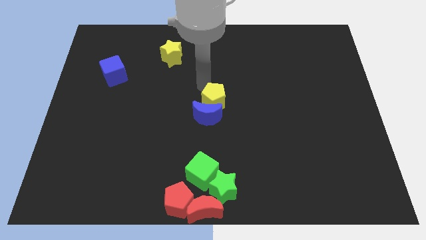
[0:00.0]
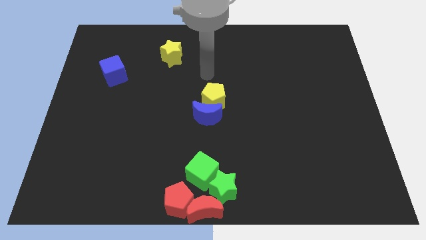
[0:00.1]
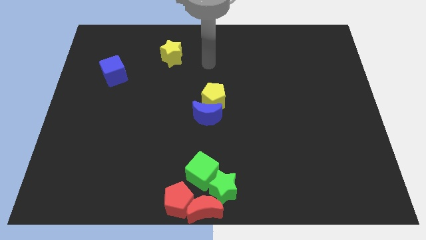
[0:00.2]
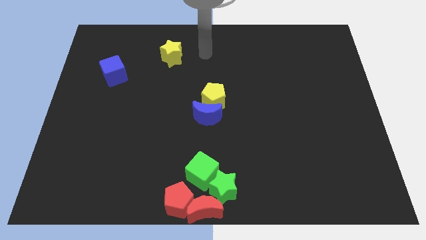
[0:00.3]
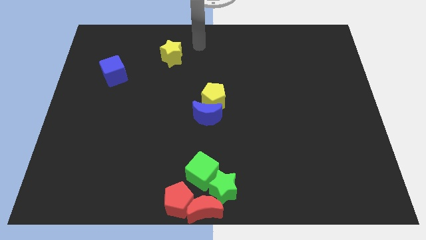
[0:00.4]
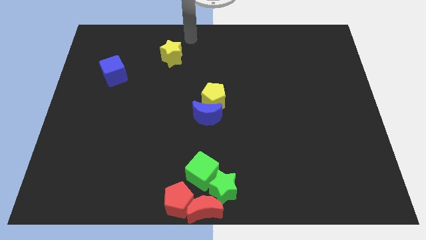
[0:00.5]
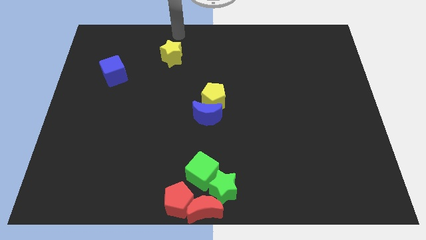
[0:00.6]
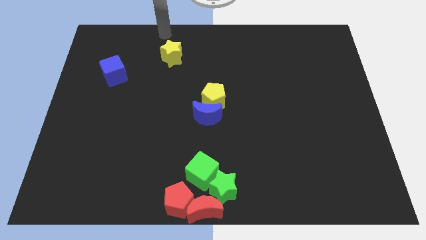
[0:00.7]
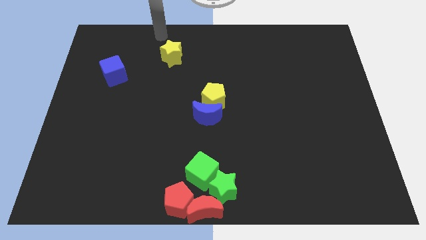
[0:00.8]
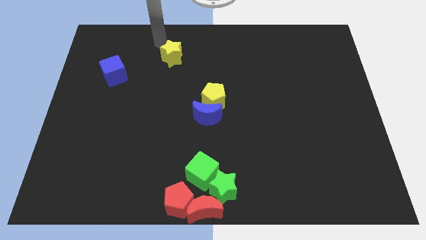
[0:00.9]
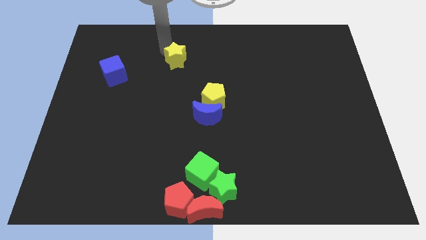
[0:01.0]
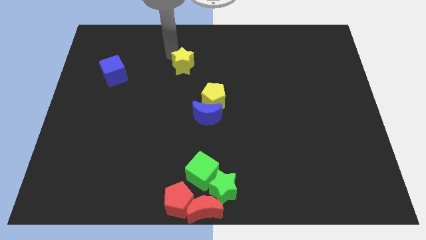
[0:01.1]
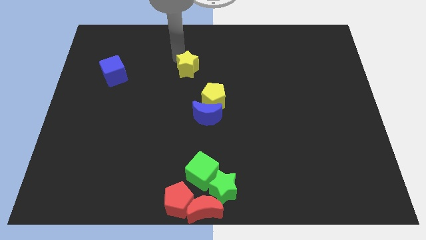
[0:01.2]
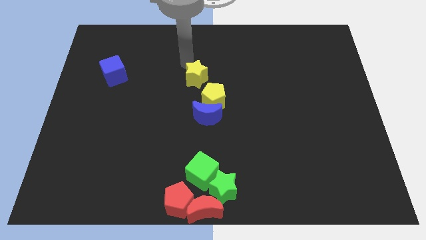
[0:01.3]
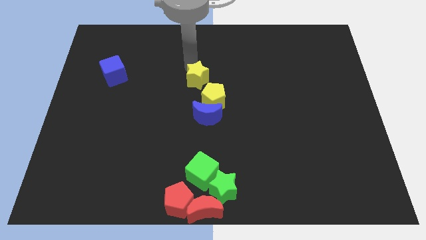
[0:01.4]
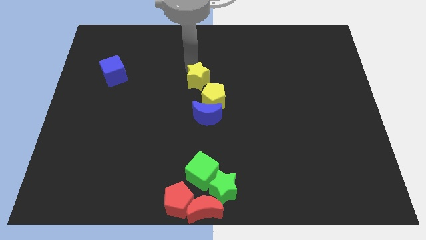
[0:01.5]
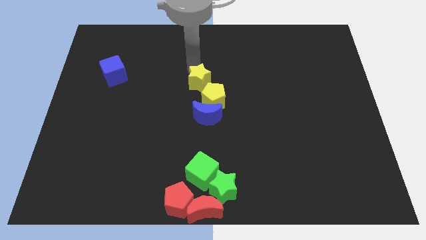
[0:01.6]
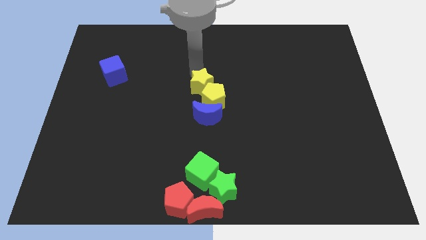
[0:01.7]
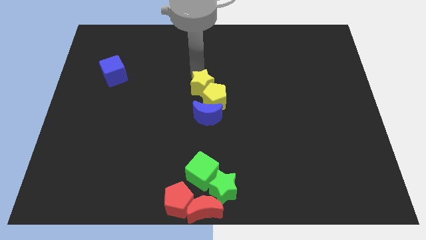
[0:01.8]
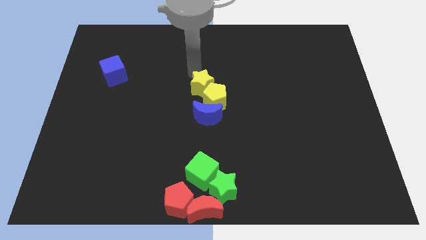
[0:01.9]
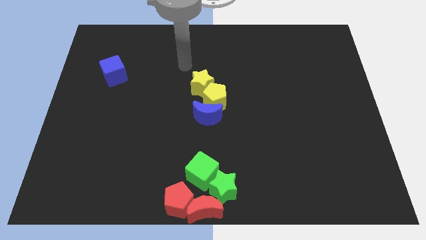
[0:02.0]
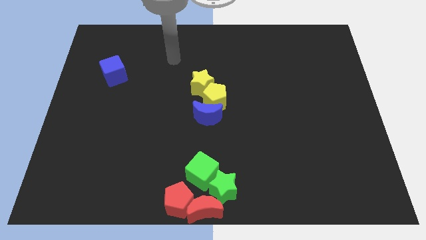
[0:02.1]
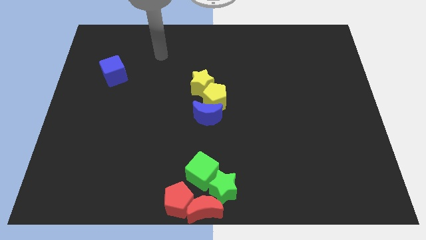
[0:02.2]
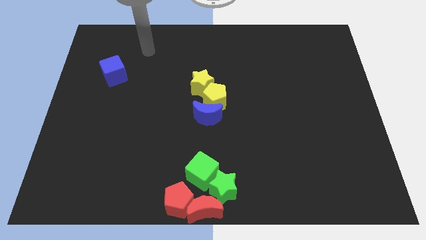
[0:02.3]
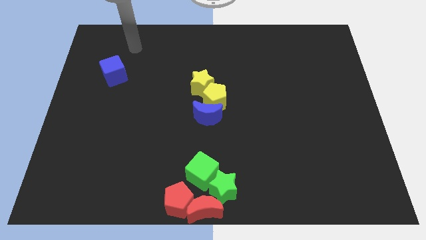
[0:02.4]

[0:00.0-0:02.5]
place the yellow star above the yellow pentagon

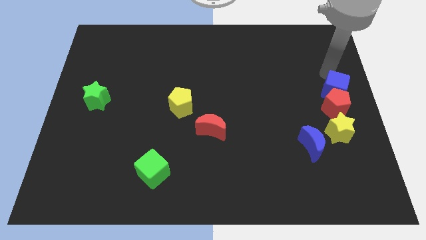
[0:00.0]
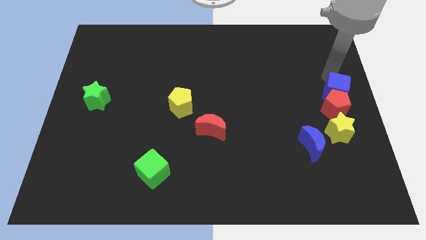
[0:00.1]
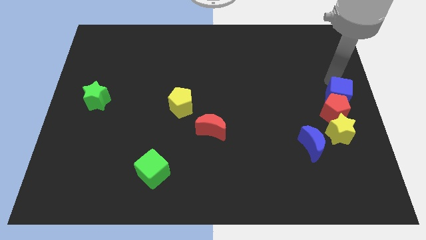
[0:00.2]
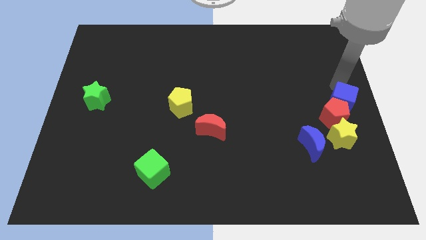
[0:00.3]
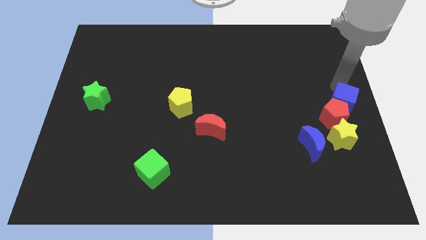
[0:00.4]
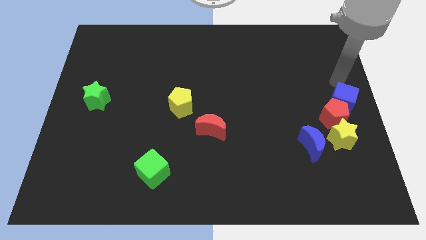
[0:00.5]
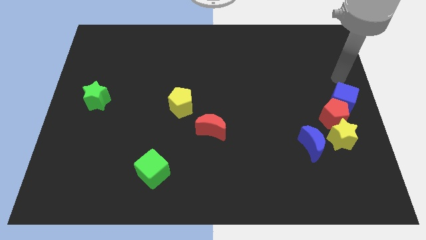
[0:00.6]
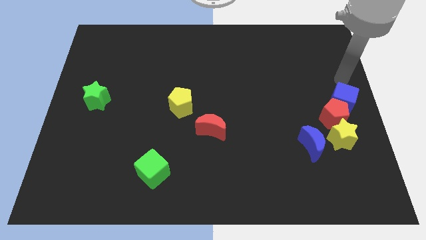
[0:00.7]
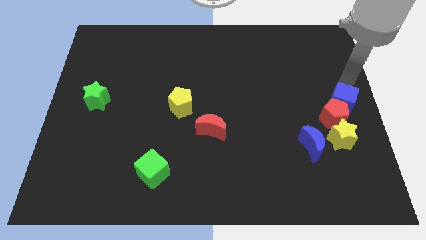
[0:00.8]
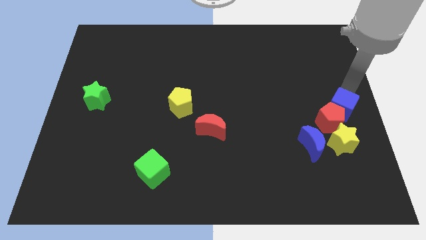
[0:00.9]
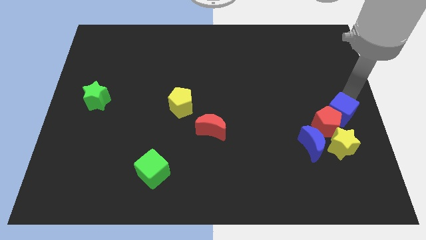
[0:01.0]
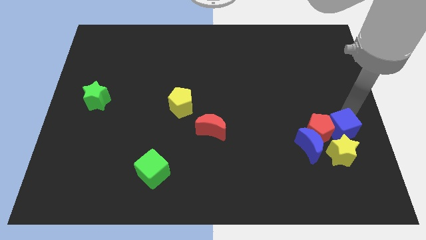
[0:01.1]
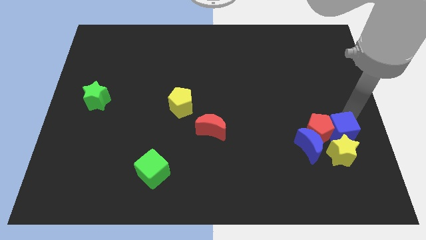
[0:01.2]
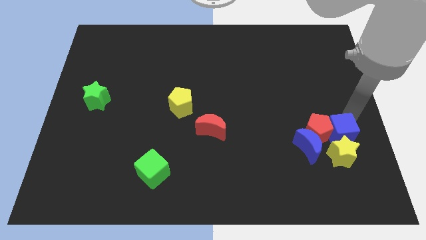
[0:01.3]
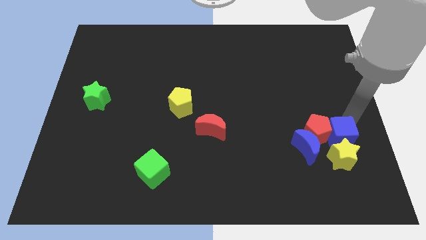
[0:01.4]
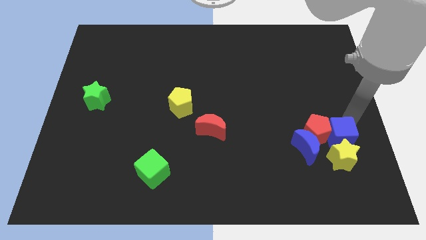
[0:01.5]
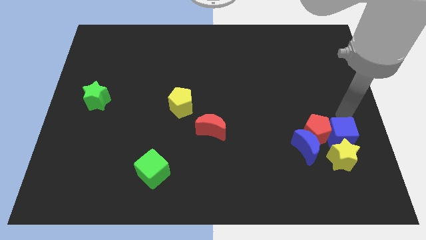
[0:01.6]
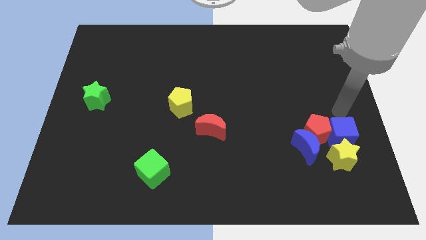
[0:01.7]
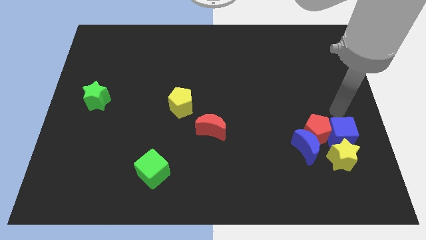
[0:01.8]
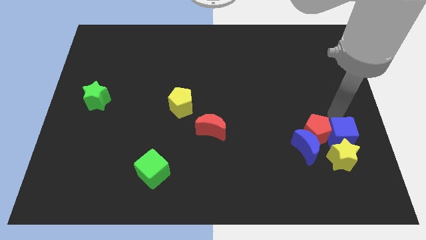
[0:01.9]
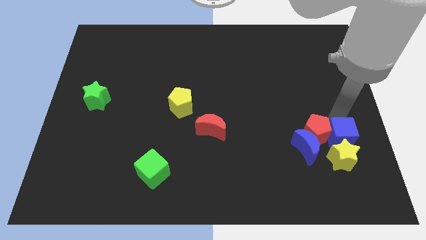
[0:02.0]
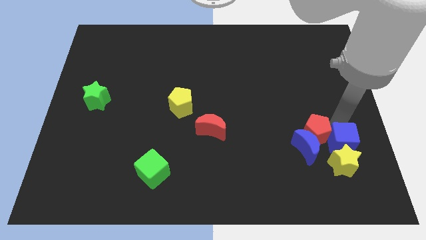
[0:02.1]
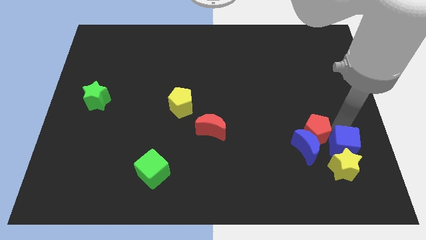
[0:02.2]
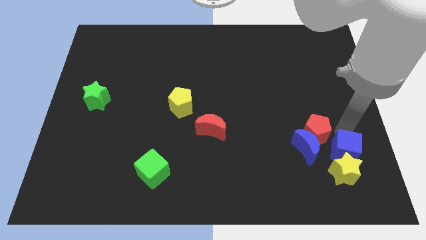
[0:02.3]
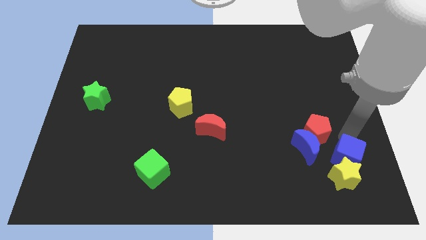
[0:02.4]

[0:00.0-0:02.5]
move the blue cube into yellow star

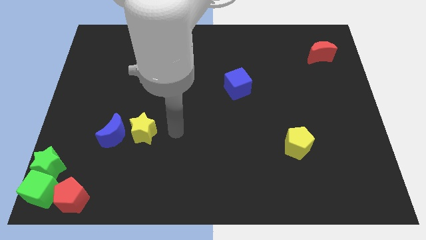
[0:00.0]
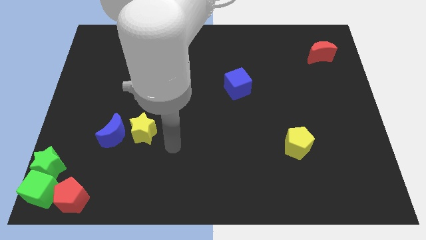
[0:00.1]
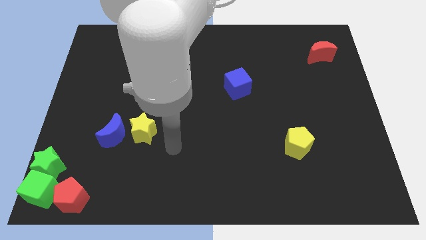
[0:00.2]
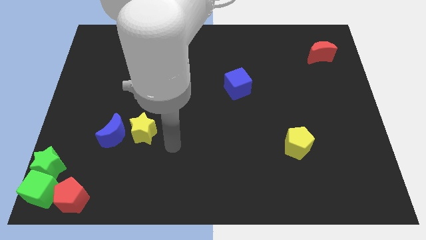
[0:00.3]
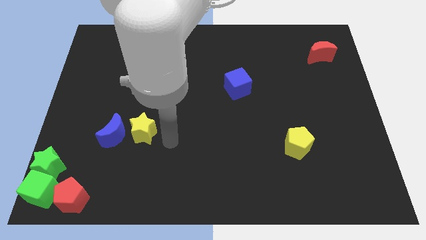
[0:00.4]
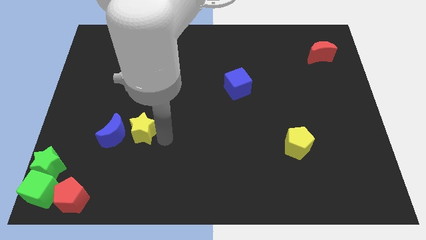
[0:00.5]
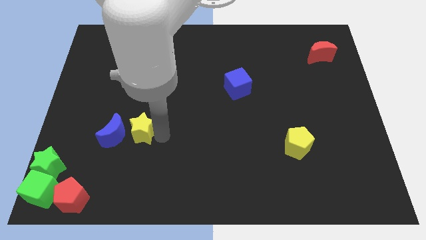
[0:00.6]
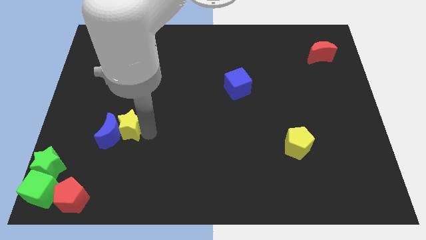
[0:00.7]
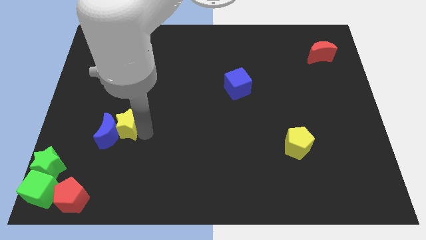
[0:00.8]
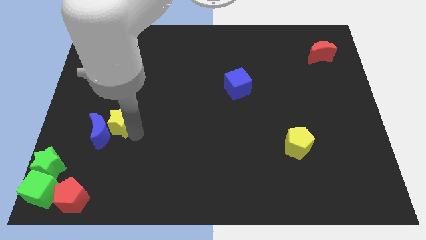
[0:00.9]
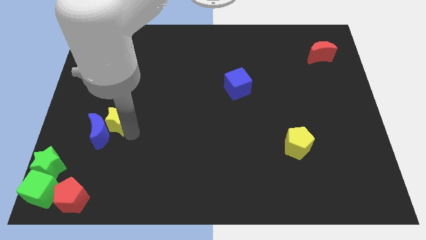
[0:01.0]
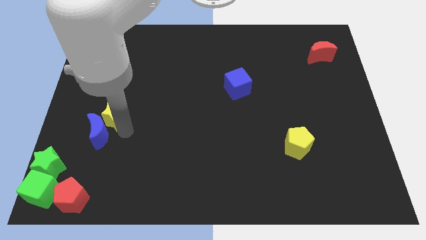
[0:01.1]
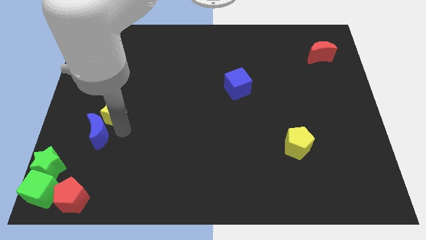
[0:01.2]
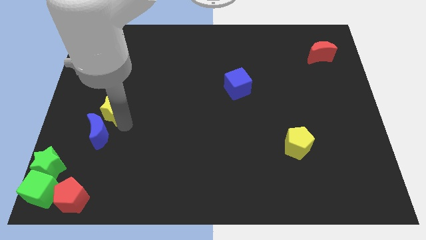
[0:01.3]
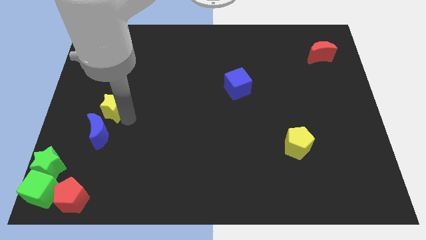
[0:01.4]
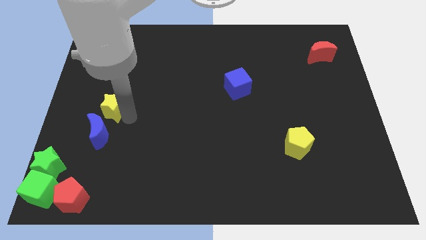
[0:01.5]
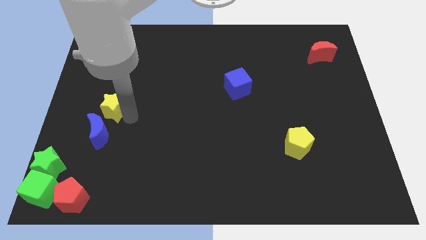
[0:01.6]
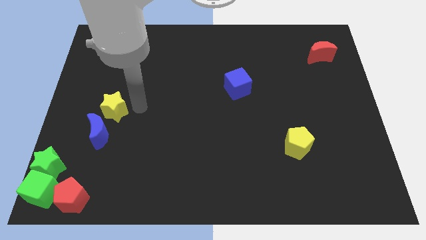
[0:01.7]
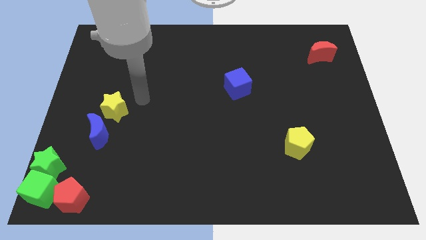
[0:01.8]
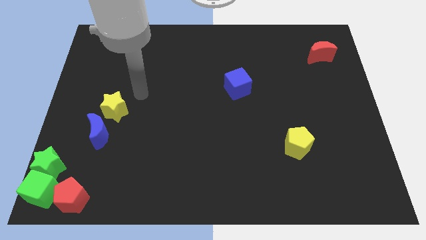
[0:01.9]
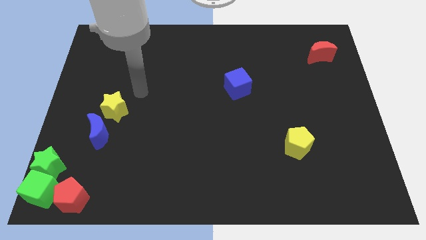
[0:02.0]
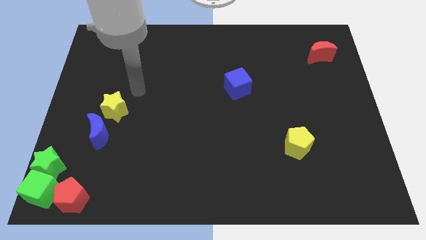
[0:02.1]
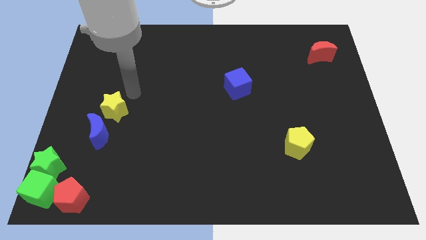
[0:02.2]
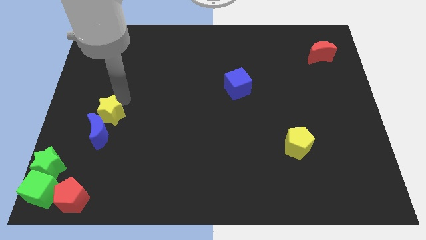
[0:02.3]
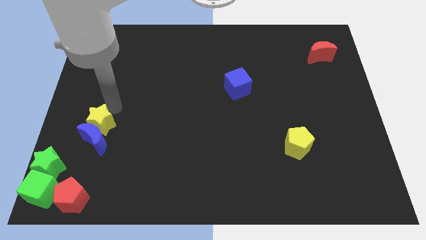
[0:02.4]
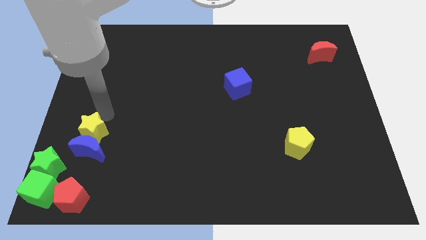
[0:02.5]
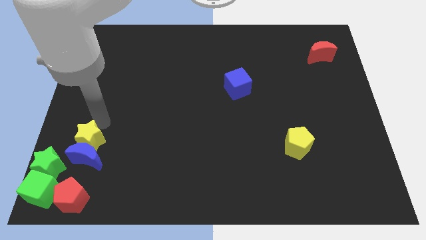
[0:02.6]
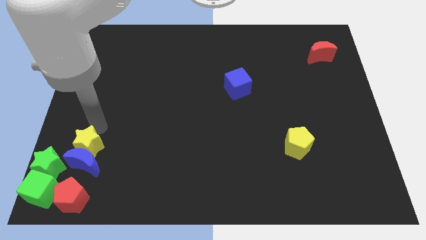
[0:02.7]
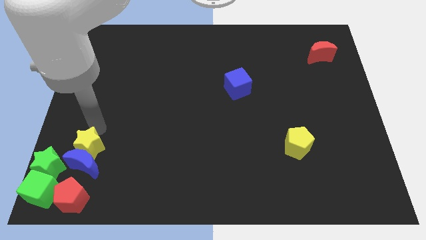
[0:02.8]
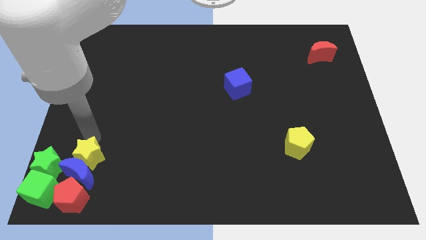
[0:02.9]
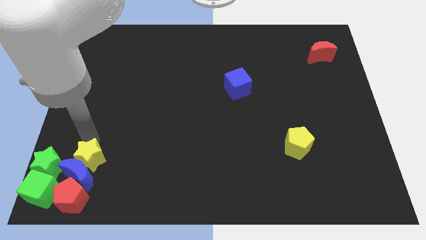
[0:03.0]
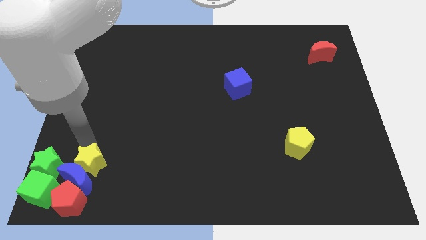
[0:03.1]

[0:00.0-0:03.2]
slide the yellow star and blue moon into the group of blocks

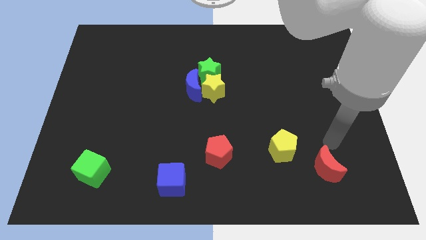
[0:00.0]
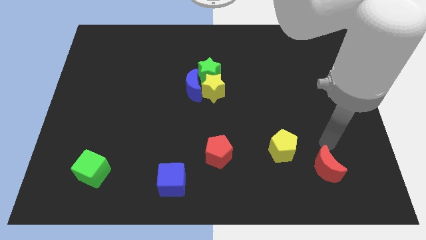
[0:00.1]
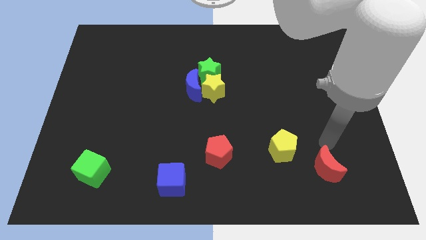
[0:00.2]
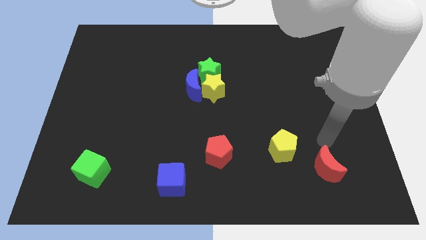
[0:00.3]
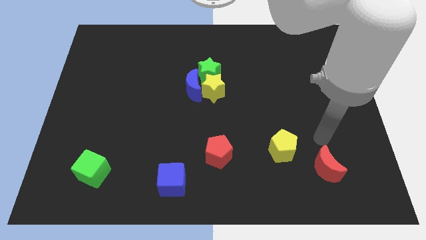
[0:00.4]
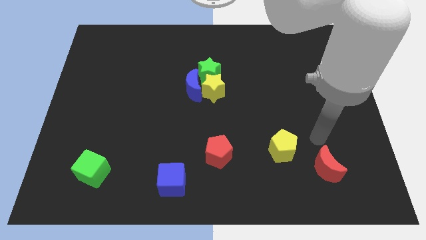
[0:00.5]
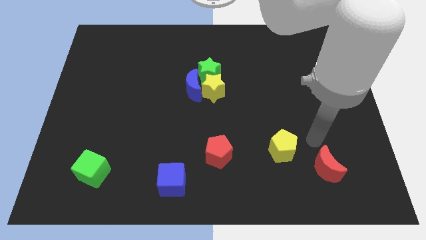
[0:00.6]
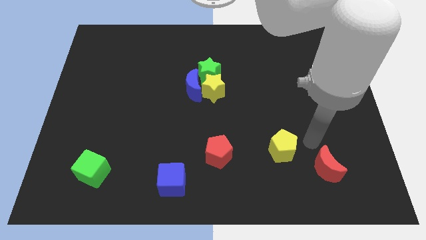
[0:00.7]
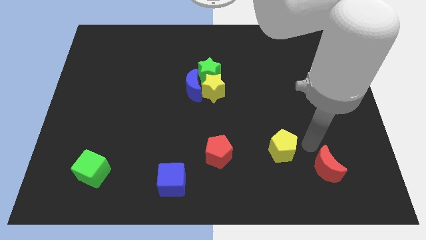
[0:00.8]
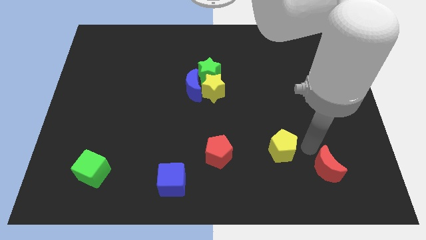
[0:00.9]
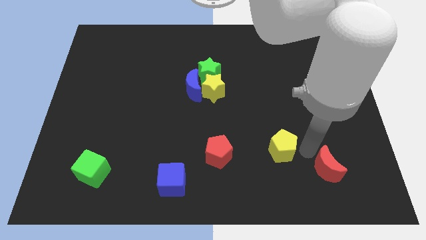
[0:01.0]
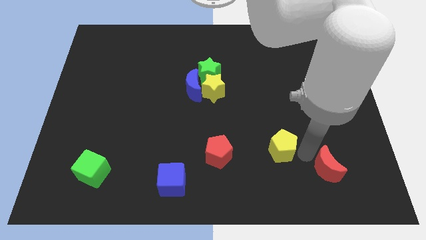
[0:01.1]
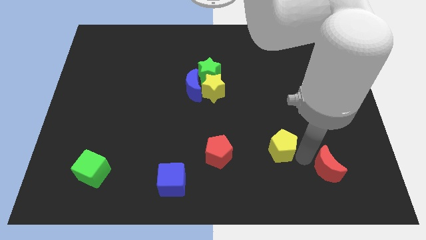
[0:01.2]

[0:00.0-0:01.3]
point your arm in between the red moon and yellow pentagon
